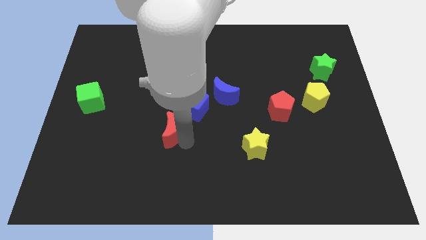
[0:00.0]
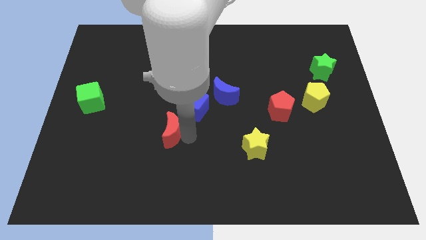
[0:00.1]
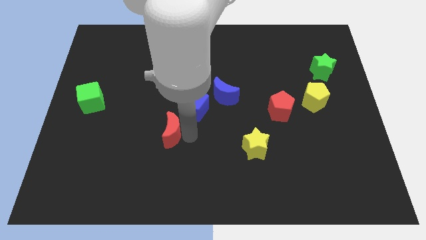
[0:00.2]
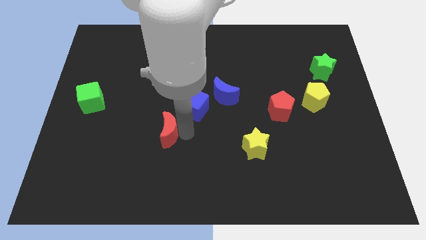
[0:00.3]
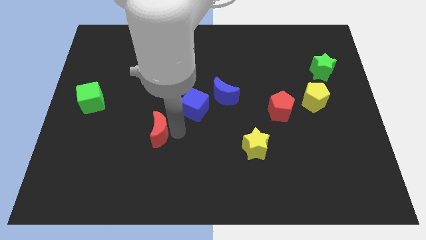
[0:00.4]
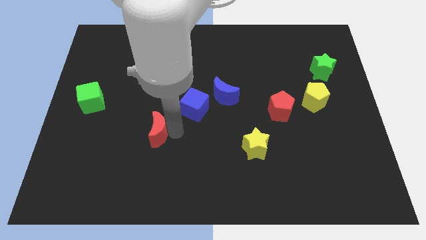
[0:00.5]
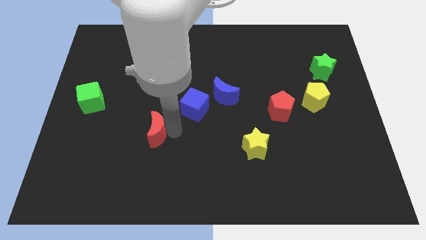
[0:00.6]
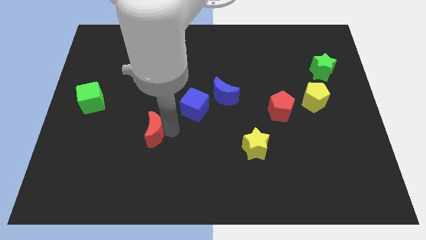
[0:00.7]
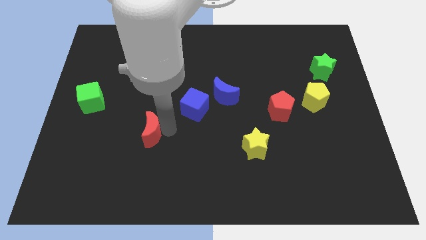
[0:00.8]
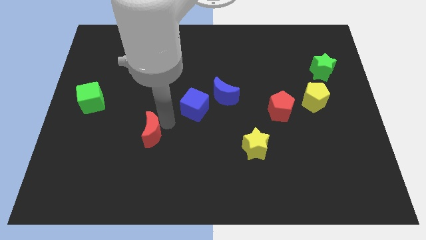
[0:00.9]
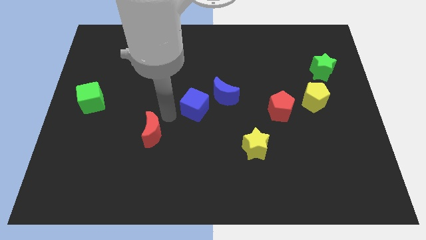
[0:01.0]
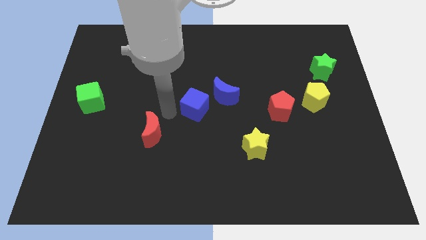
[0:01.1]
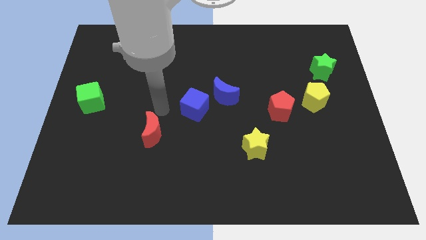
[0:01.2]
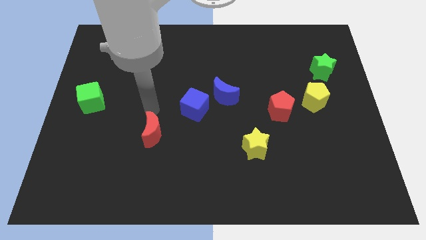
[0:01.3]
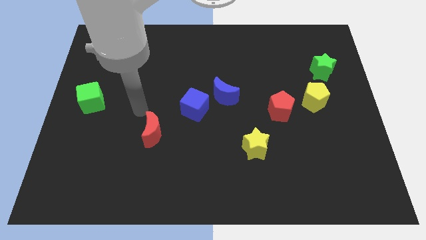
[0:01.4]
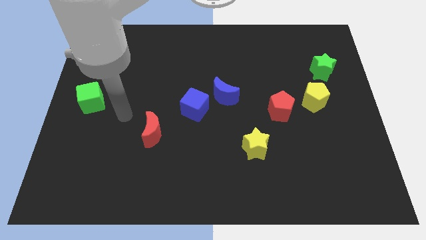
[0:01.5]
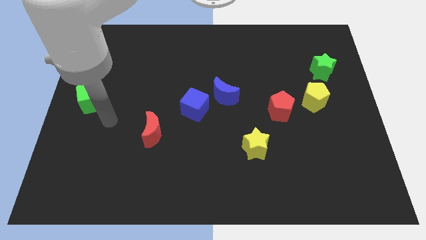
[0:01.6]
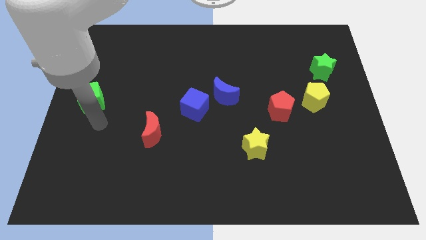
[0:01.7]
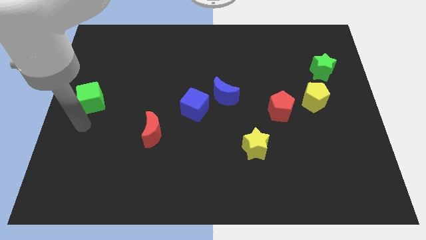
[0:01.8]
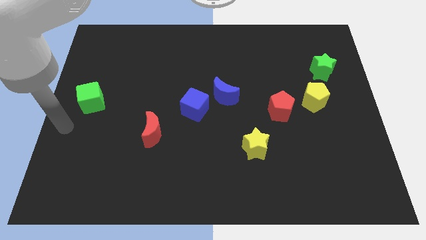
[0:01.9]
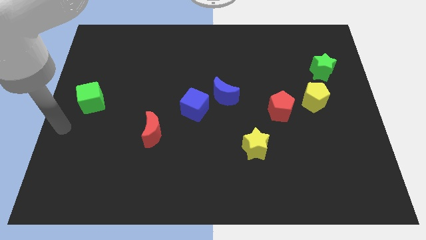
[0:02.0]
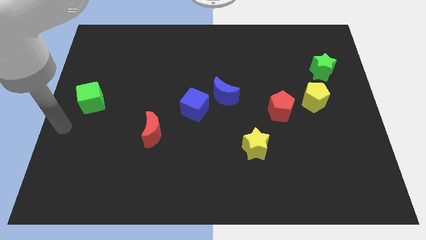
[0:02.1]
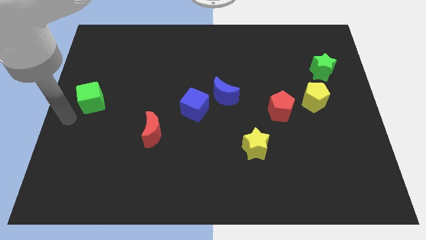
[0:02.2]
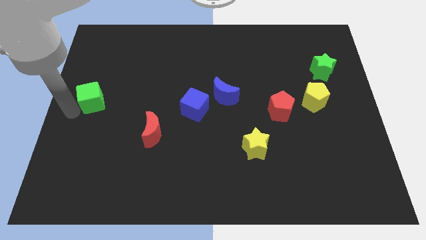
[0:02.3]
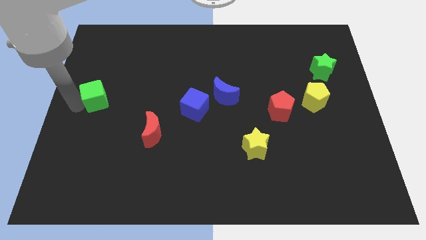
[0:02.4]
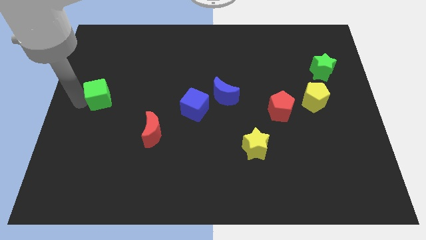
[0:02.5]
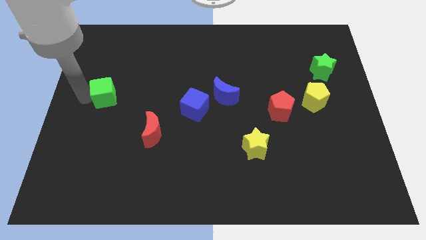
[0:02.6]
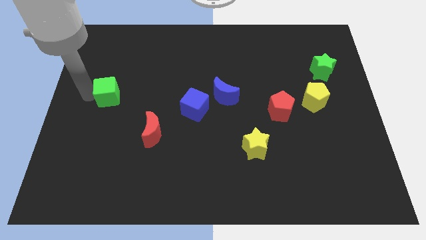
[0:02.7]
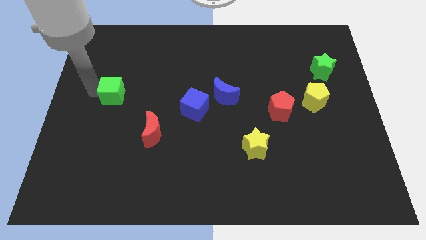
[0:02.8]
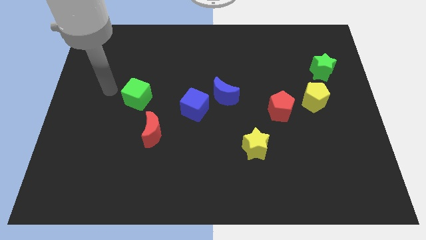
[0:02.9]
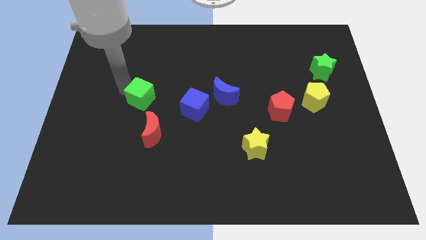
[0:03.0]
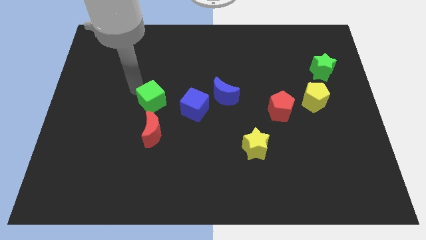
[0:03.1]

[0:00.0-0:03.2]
place the green cube above red crescent

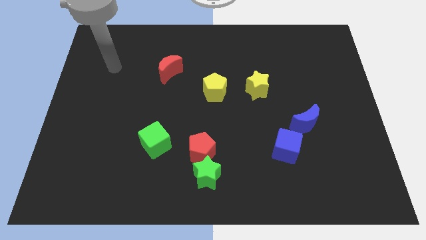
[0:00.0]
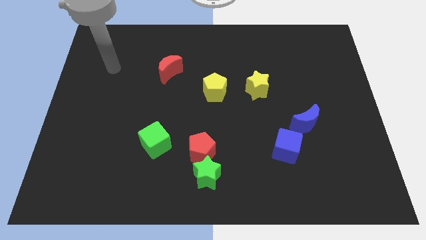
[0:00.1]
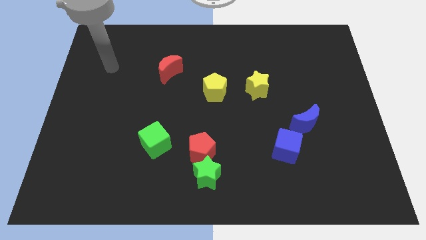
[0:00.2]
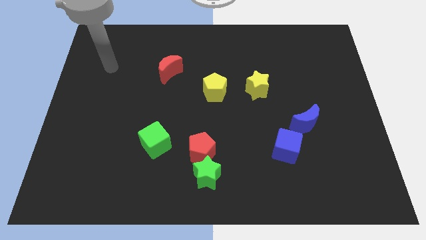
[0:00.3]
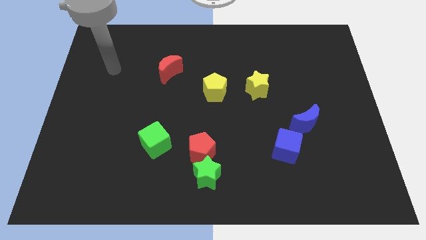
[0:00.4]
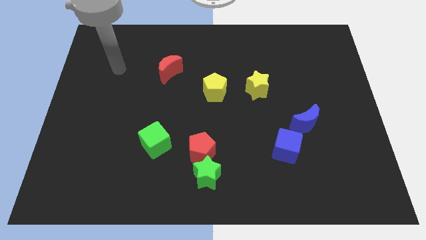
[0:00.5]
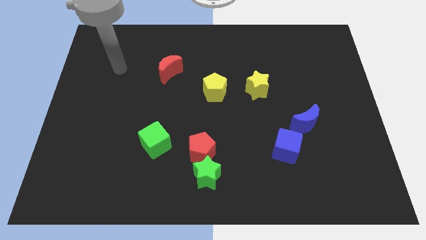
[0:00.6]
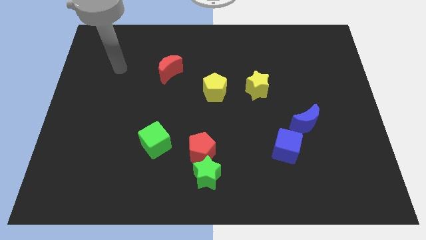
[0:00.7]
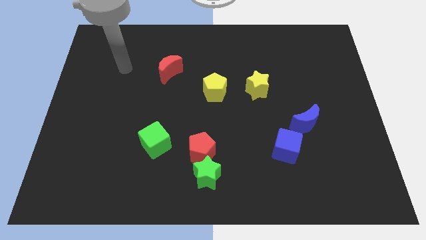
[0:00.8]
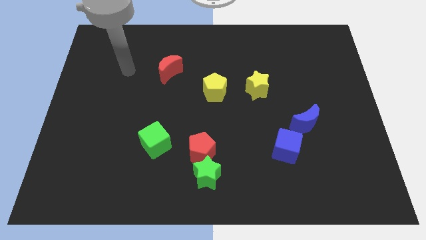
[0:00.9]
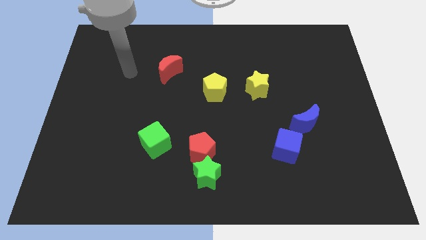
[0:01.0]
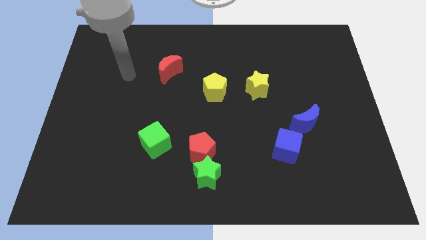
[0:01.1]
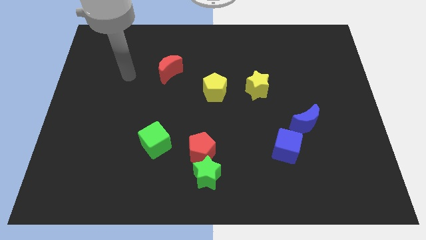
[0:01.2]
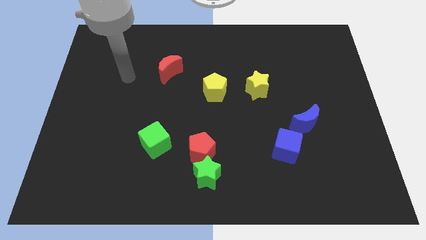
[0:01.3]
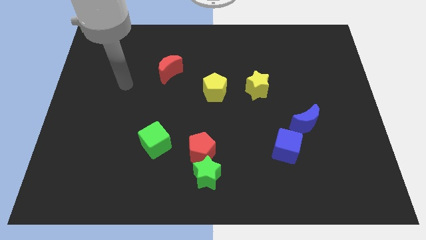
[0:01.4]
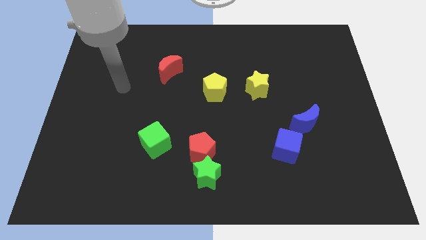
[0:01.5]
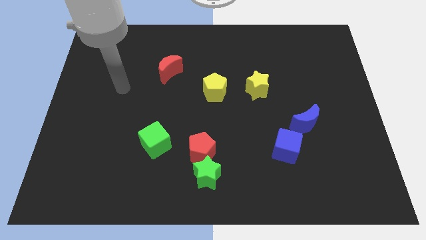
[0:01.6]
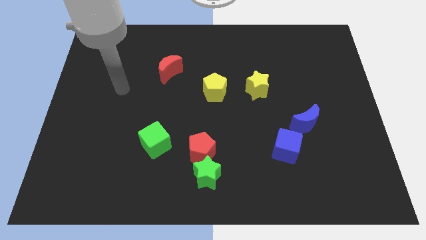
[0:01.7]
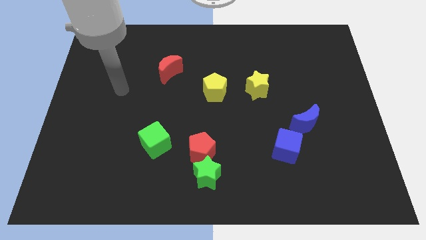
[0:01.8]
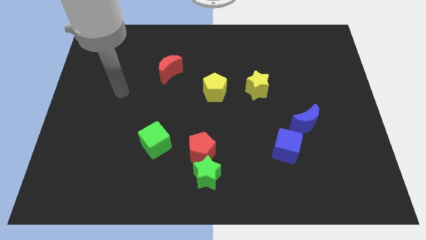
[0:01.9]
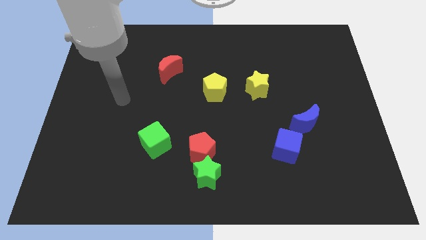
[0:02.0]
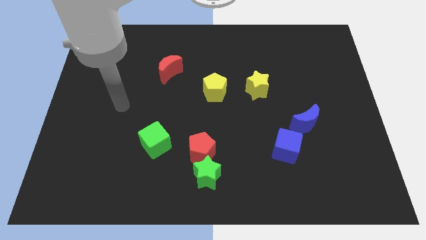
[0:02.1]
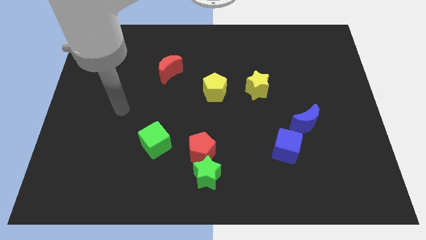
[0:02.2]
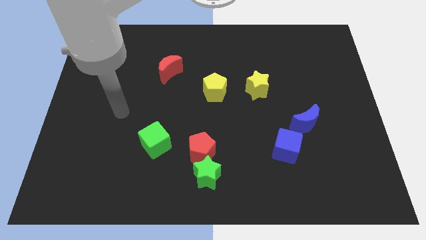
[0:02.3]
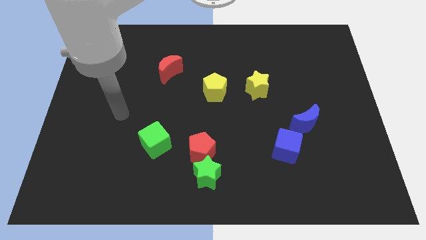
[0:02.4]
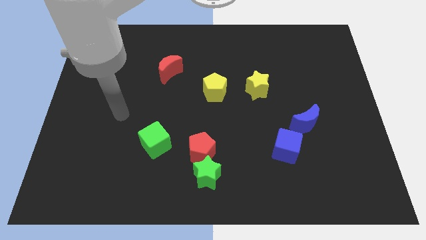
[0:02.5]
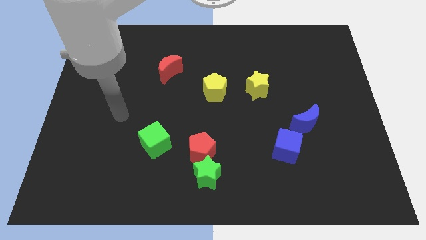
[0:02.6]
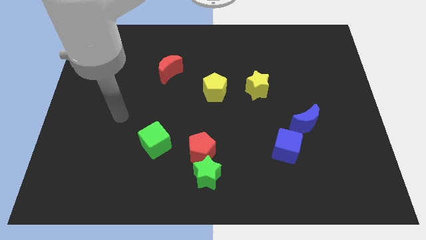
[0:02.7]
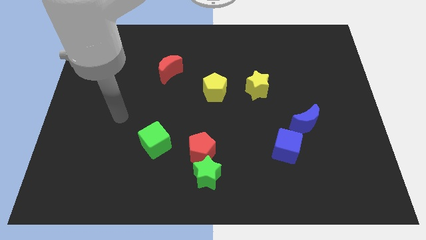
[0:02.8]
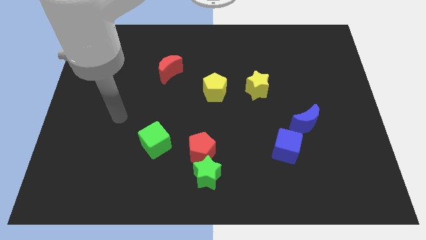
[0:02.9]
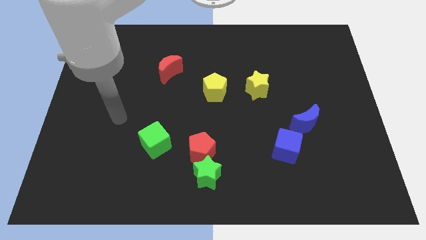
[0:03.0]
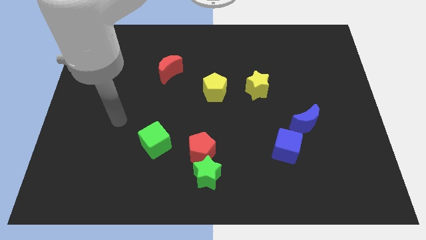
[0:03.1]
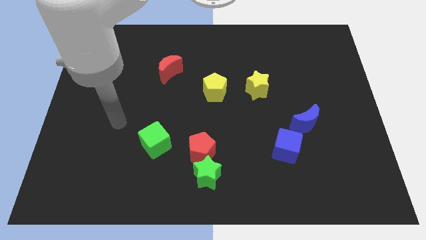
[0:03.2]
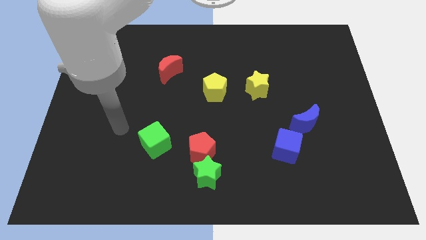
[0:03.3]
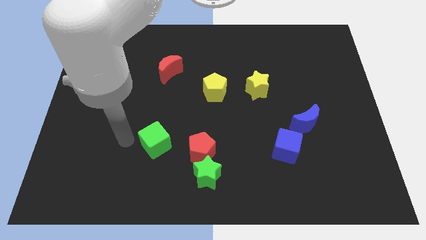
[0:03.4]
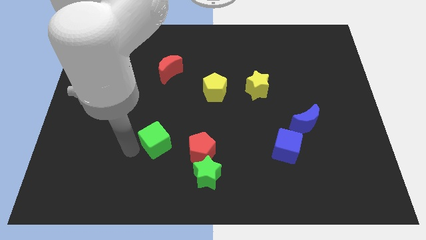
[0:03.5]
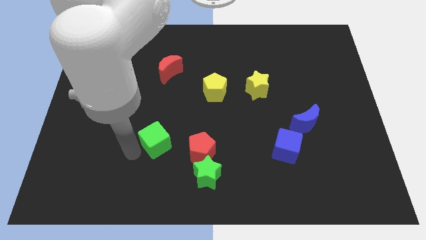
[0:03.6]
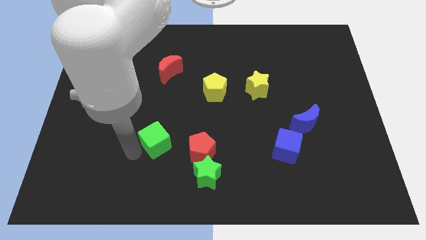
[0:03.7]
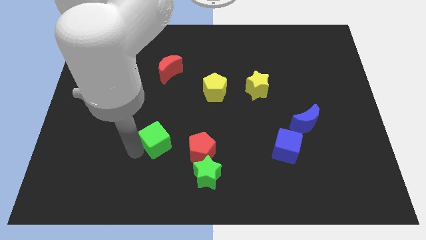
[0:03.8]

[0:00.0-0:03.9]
touch the left side of the green cube

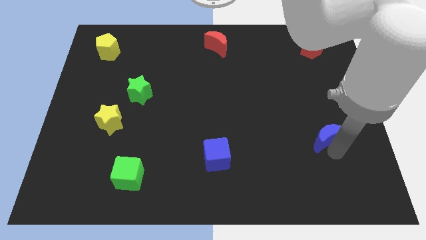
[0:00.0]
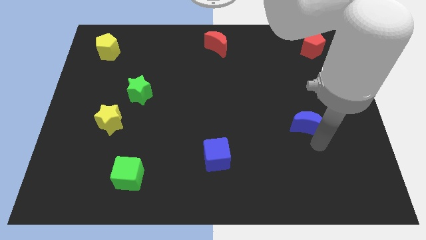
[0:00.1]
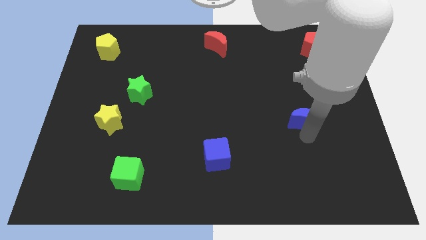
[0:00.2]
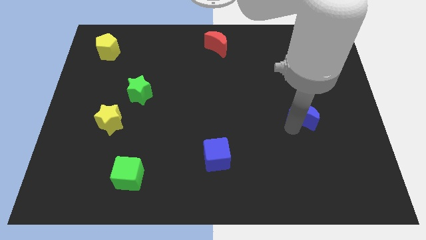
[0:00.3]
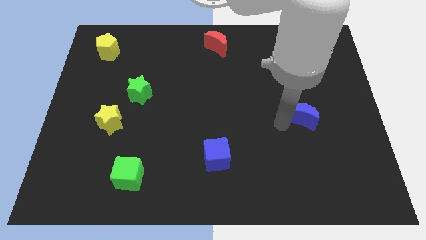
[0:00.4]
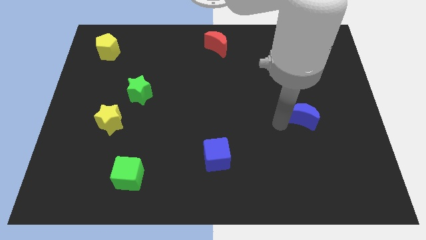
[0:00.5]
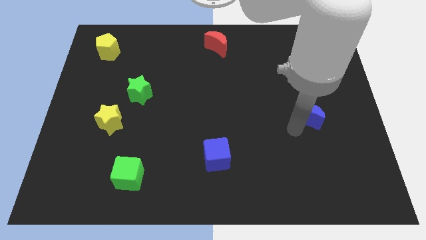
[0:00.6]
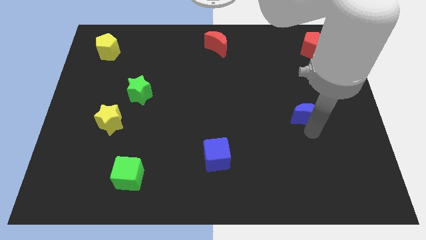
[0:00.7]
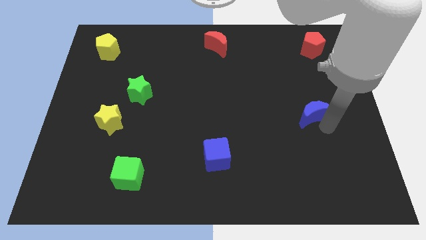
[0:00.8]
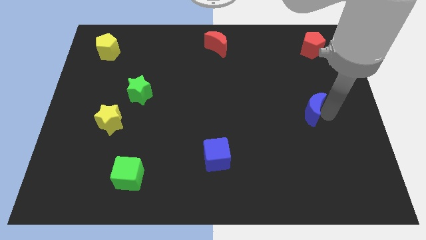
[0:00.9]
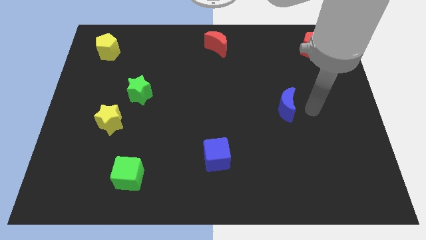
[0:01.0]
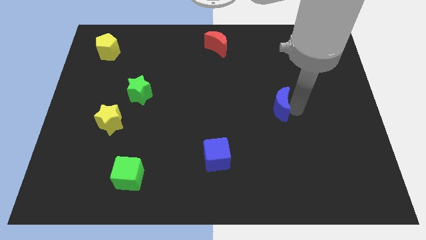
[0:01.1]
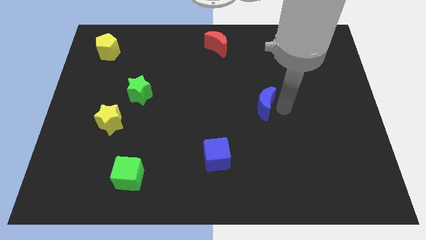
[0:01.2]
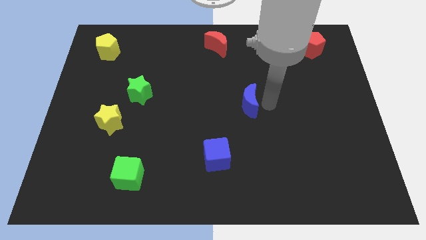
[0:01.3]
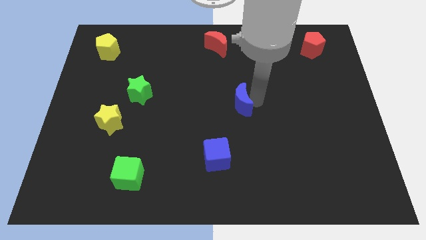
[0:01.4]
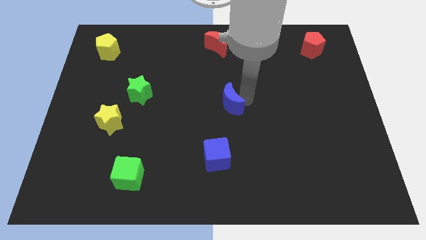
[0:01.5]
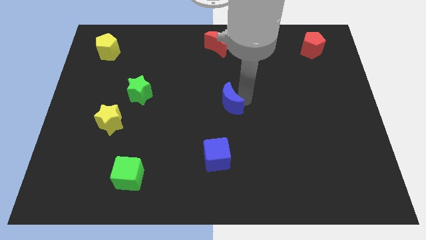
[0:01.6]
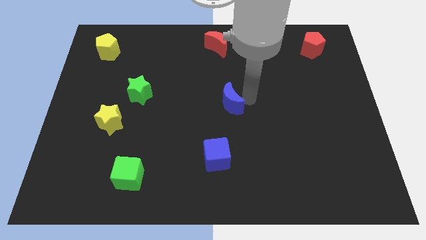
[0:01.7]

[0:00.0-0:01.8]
push the blue crescent to the center of the board
